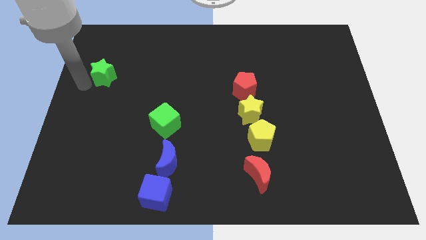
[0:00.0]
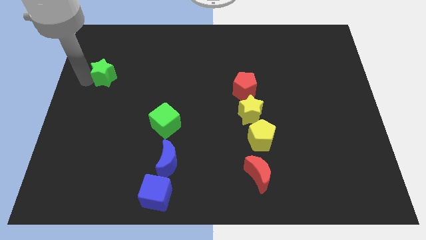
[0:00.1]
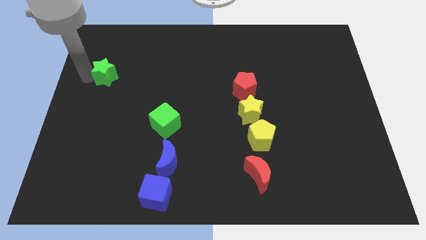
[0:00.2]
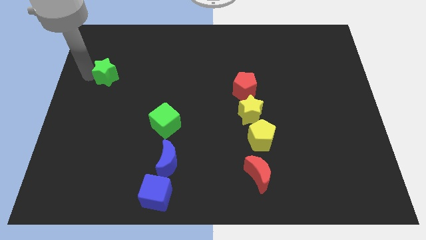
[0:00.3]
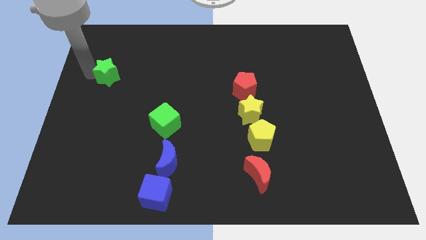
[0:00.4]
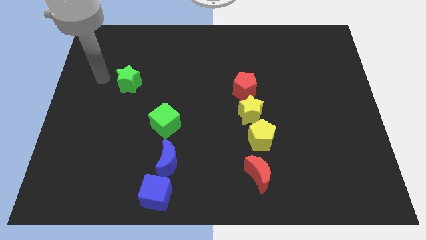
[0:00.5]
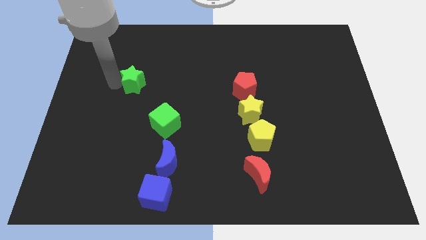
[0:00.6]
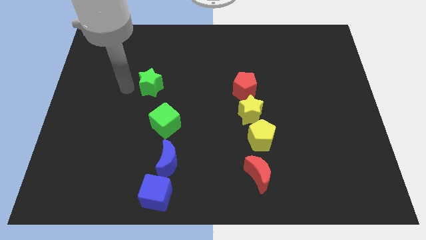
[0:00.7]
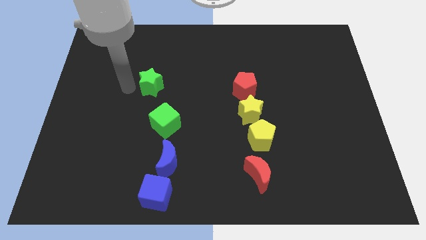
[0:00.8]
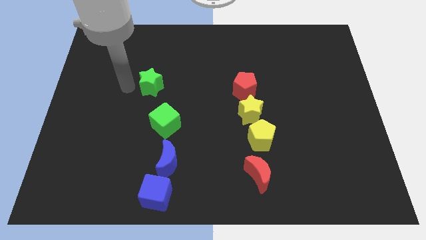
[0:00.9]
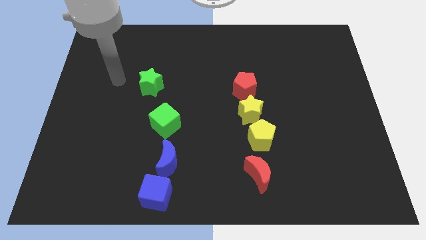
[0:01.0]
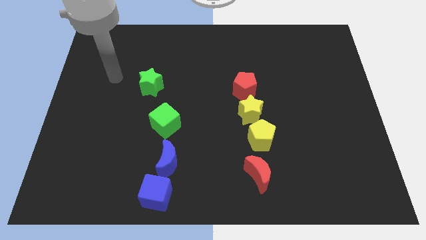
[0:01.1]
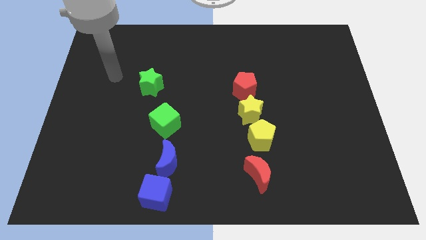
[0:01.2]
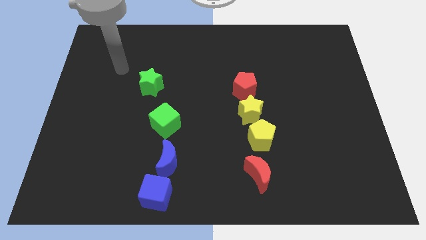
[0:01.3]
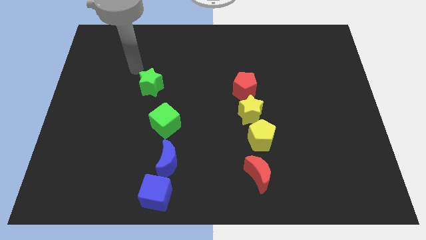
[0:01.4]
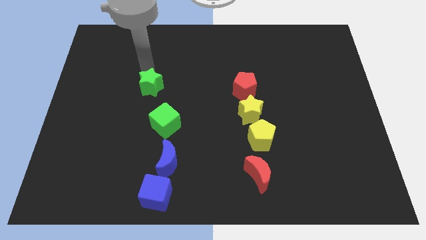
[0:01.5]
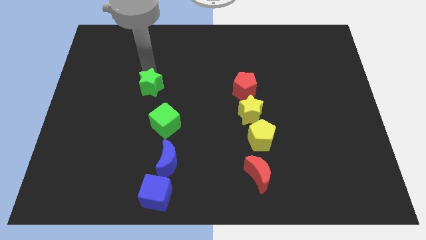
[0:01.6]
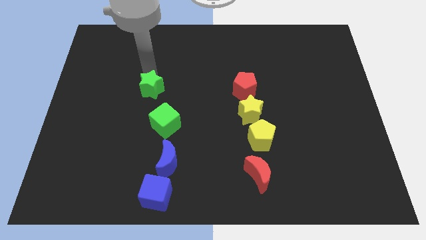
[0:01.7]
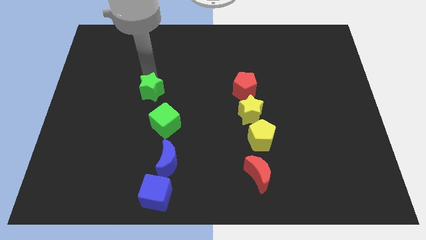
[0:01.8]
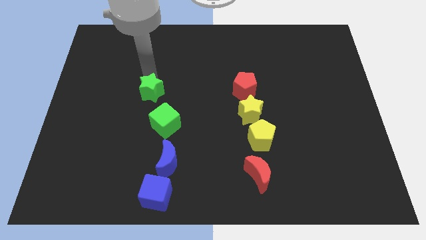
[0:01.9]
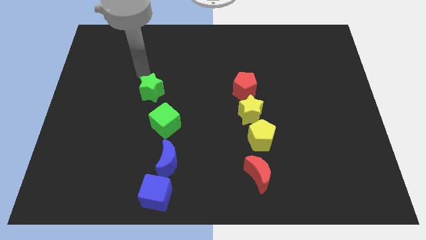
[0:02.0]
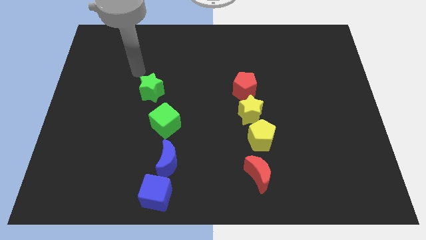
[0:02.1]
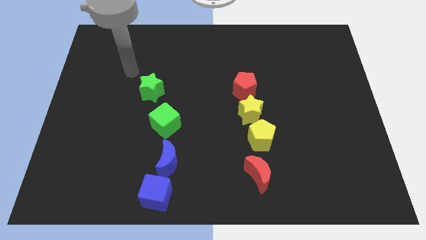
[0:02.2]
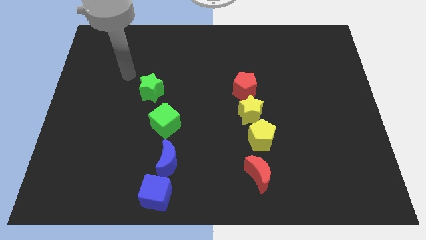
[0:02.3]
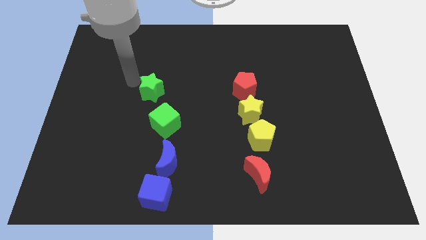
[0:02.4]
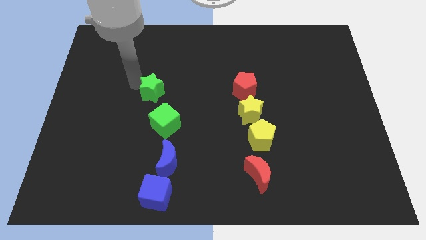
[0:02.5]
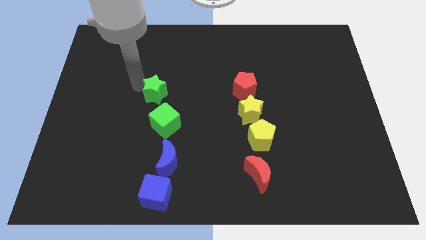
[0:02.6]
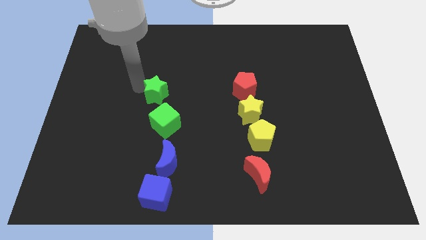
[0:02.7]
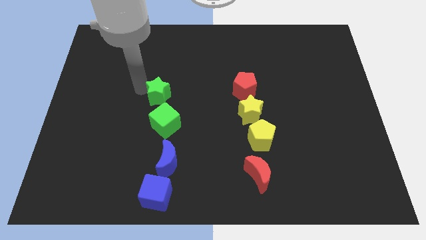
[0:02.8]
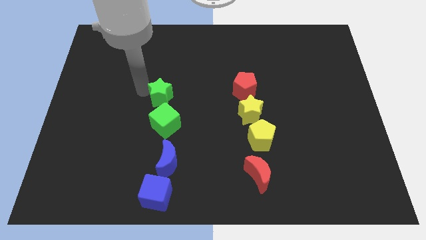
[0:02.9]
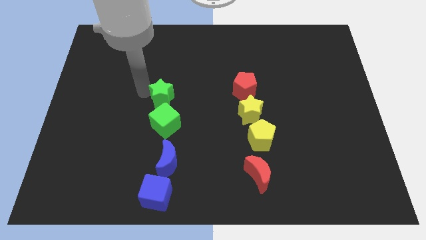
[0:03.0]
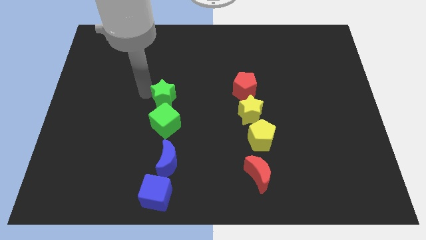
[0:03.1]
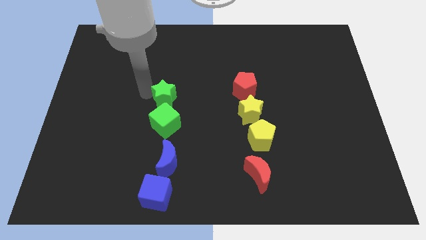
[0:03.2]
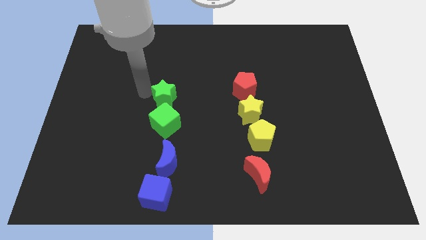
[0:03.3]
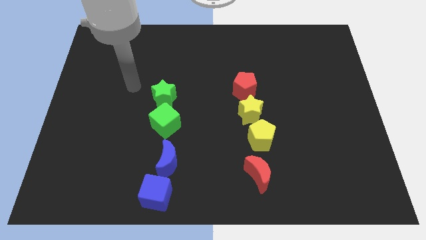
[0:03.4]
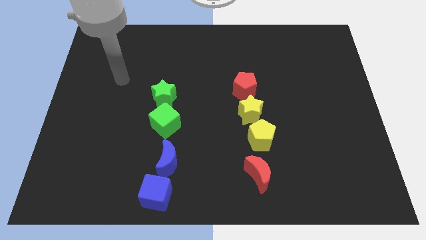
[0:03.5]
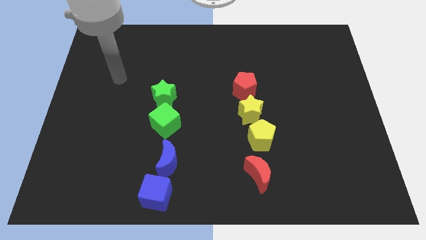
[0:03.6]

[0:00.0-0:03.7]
place green star above green cube

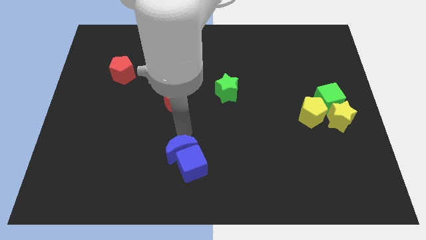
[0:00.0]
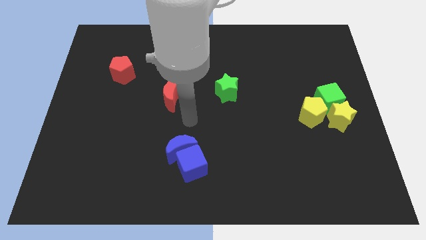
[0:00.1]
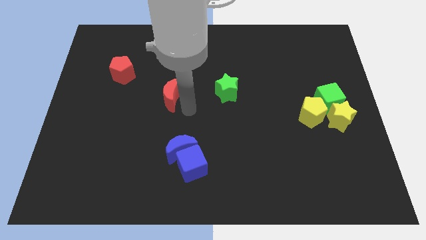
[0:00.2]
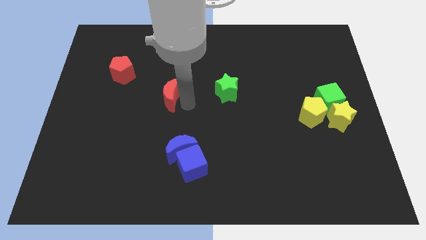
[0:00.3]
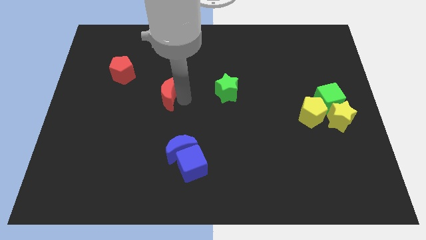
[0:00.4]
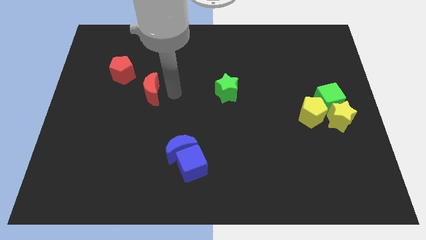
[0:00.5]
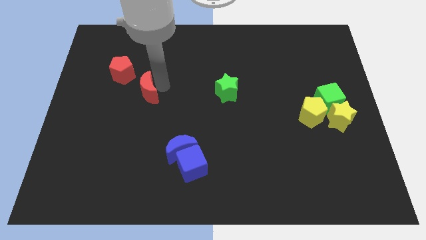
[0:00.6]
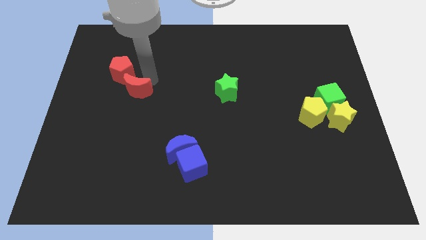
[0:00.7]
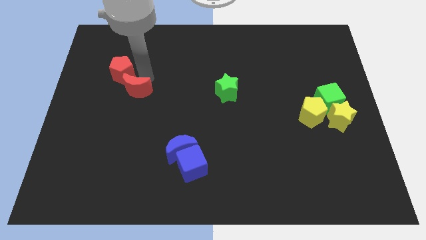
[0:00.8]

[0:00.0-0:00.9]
push the red moon towards the red pentagon

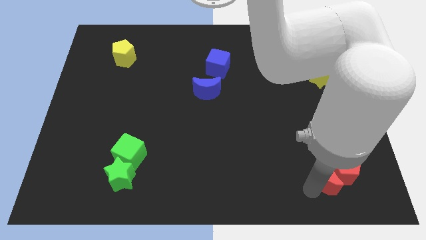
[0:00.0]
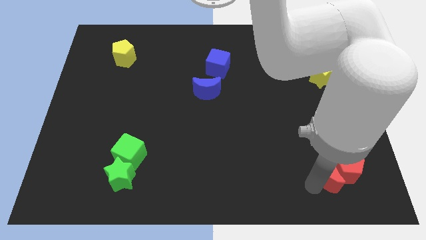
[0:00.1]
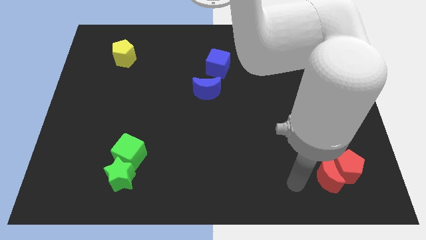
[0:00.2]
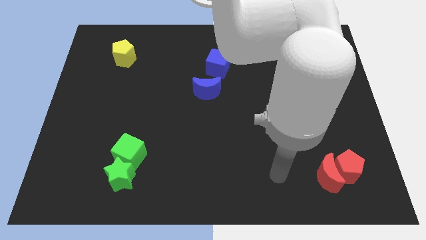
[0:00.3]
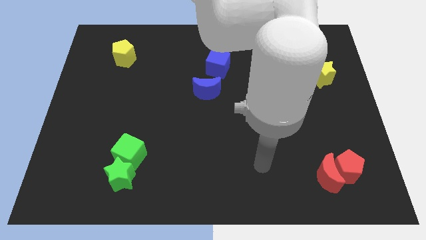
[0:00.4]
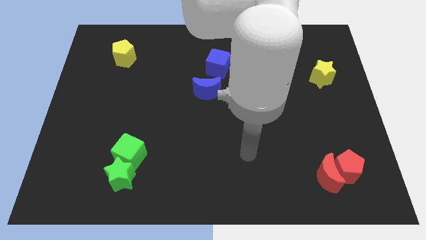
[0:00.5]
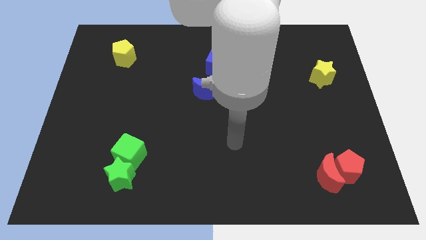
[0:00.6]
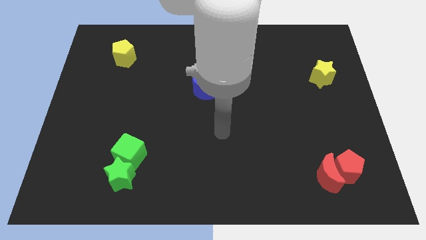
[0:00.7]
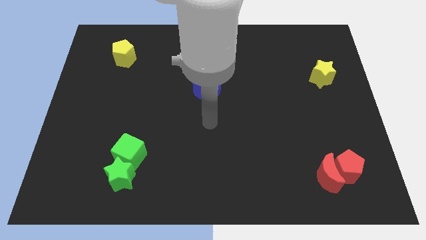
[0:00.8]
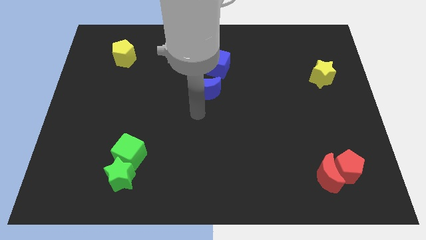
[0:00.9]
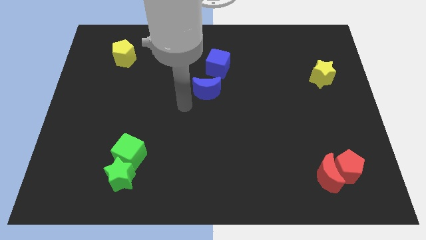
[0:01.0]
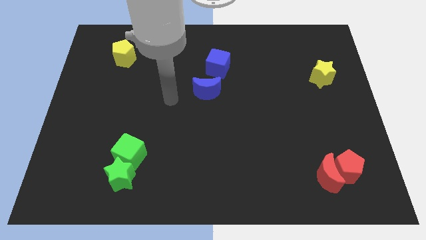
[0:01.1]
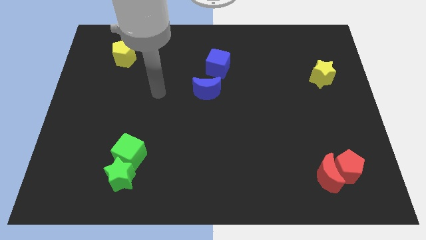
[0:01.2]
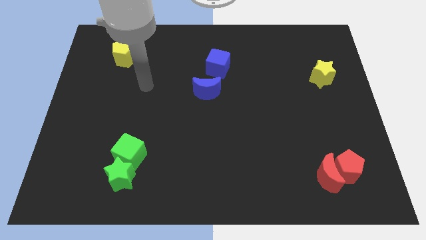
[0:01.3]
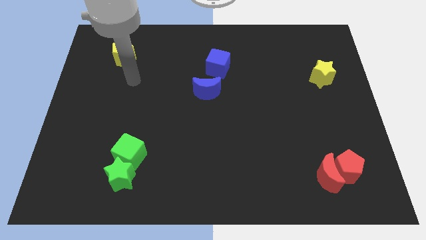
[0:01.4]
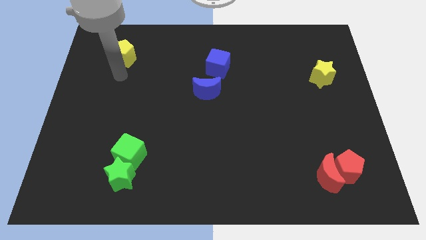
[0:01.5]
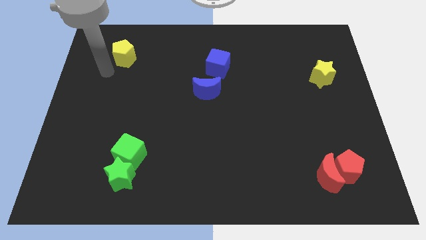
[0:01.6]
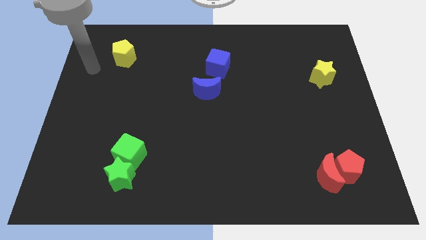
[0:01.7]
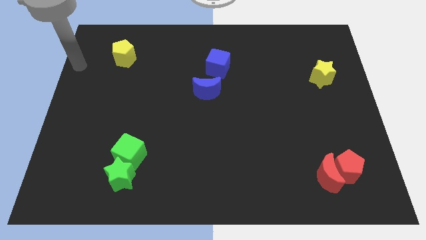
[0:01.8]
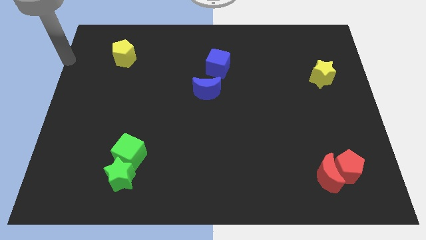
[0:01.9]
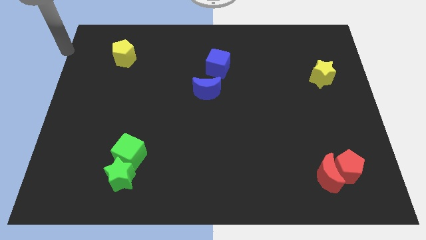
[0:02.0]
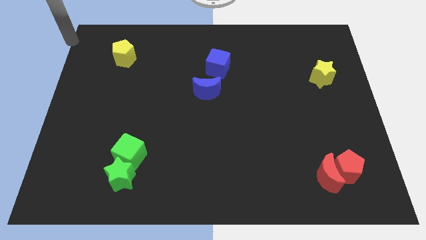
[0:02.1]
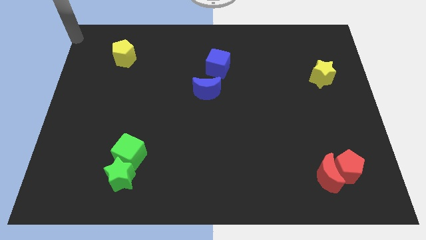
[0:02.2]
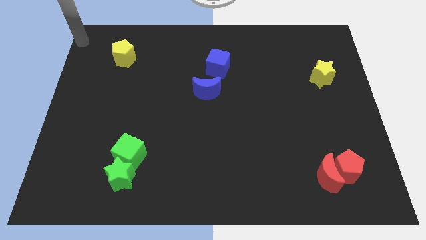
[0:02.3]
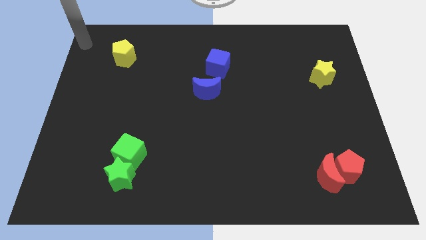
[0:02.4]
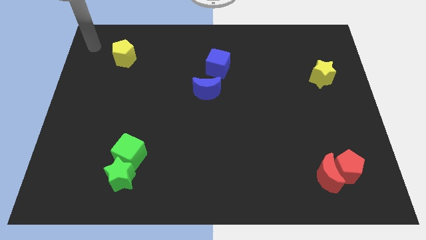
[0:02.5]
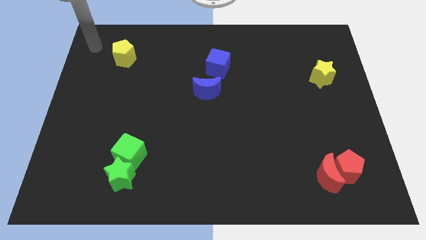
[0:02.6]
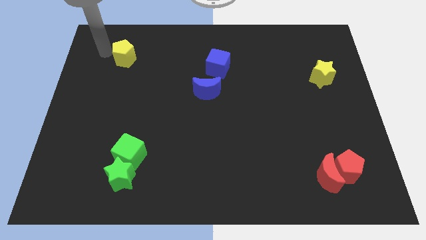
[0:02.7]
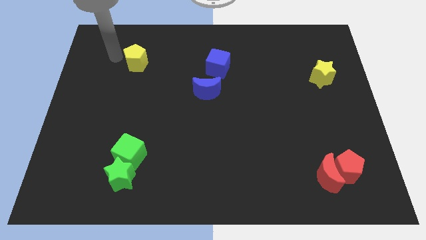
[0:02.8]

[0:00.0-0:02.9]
place your arm to the left of yellow pentagon

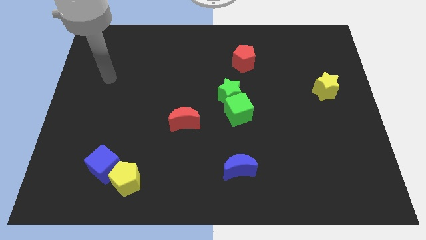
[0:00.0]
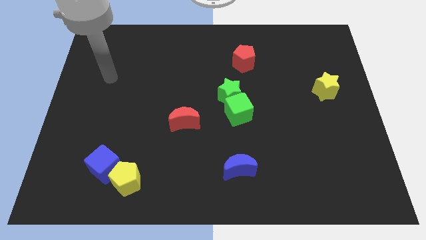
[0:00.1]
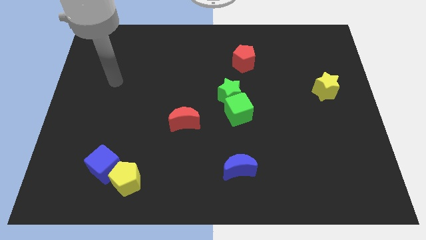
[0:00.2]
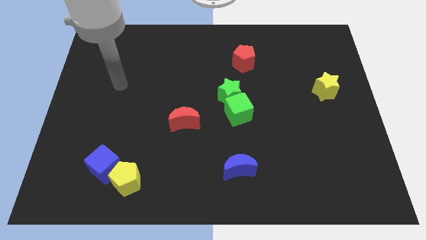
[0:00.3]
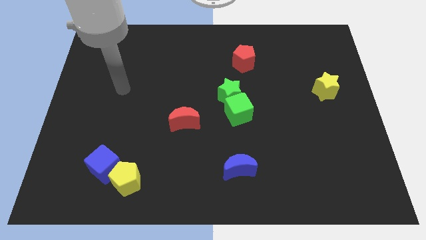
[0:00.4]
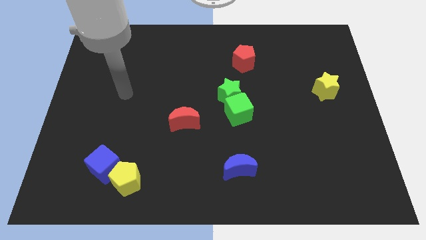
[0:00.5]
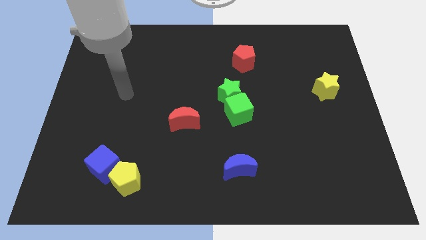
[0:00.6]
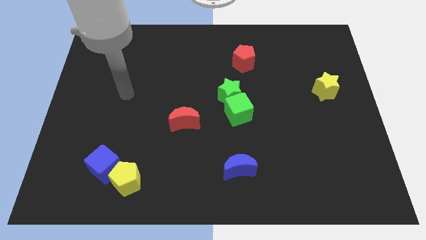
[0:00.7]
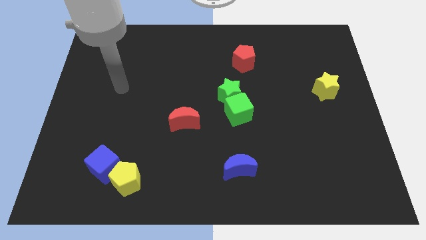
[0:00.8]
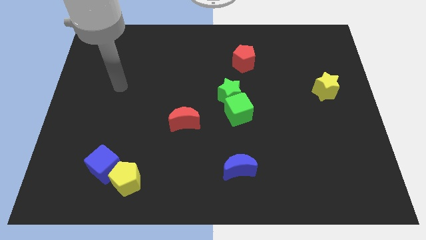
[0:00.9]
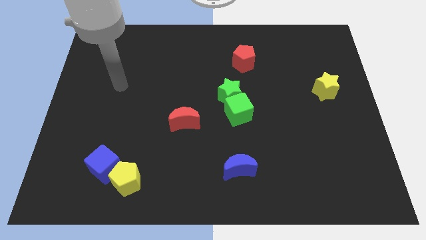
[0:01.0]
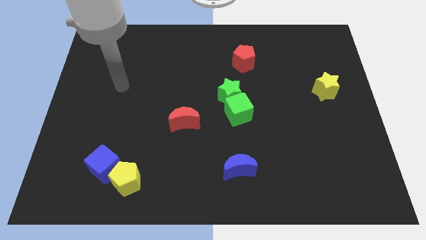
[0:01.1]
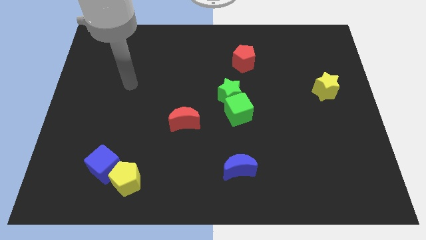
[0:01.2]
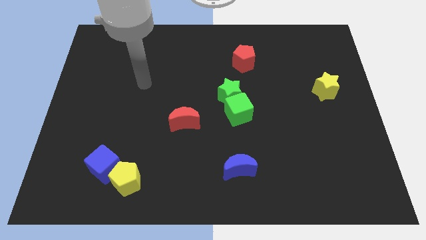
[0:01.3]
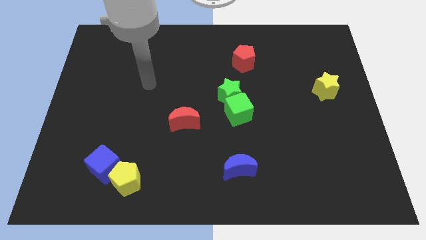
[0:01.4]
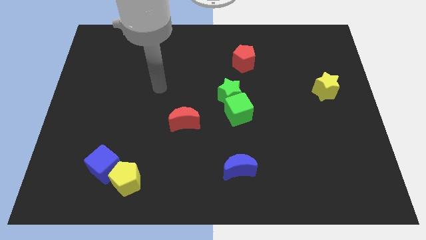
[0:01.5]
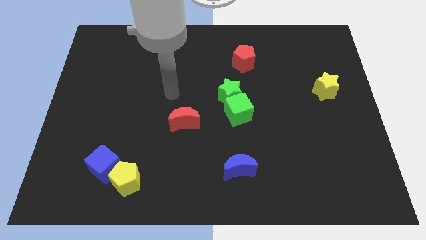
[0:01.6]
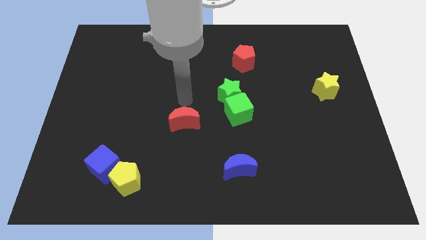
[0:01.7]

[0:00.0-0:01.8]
move your hand vertically above the red moon
